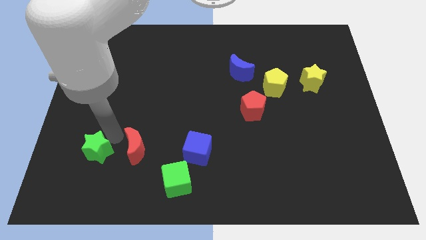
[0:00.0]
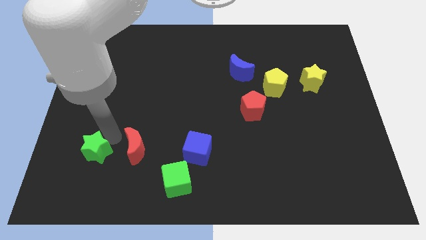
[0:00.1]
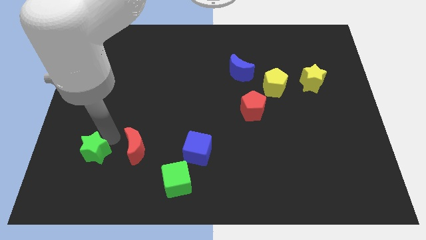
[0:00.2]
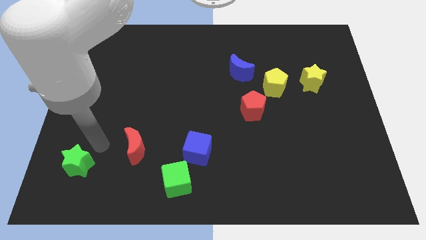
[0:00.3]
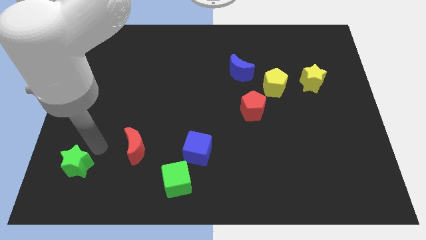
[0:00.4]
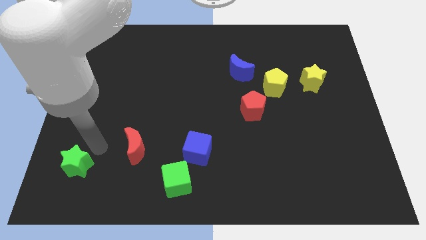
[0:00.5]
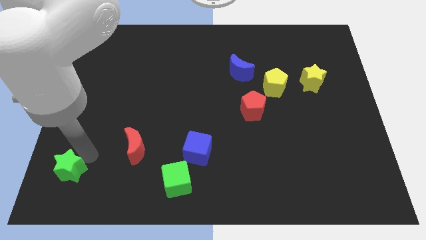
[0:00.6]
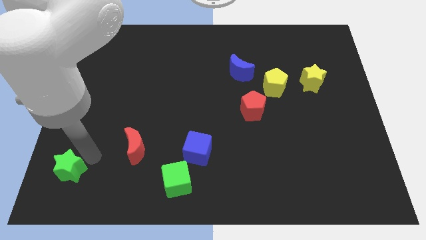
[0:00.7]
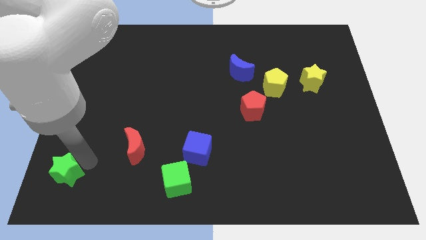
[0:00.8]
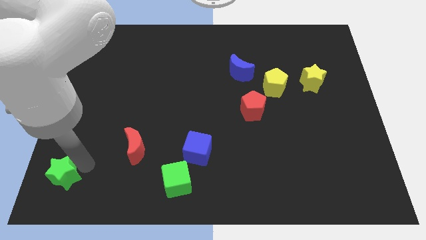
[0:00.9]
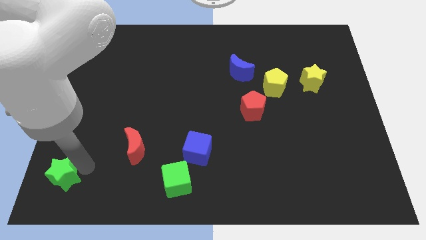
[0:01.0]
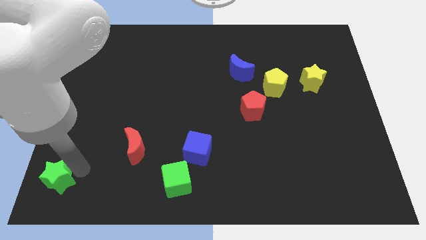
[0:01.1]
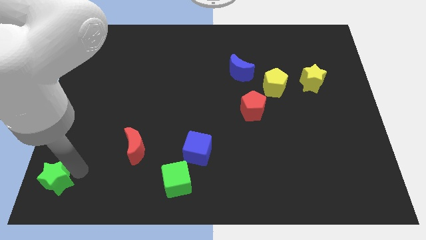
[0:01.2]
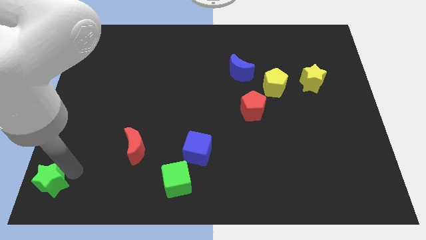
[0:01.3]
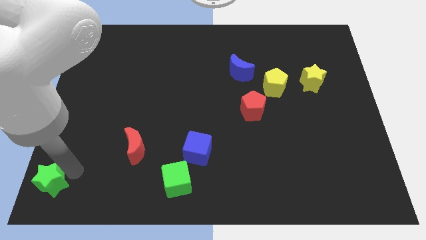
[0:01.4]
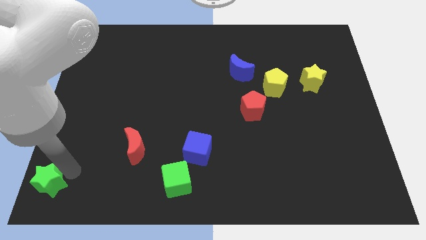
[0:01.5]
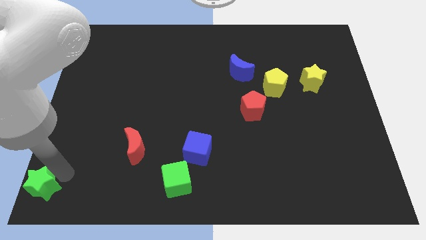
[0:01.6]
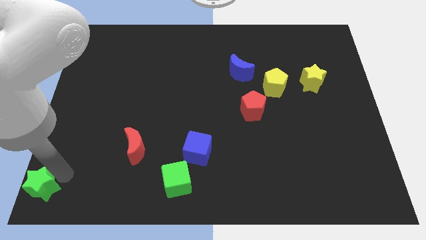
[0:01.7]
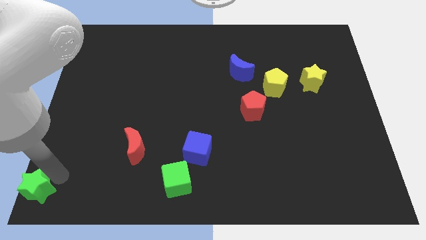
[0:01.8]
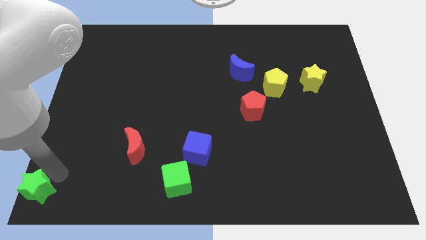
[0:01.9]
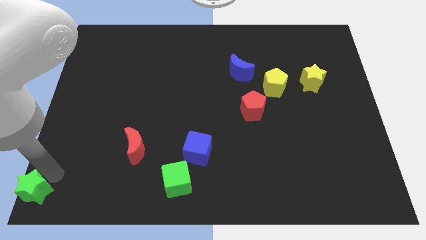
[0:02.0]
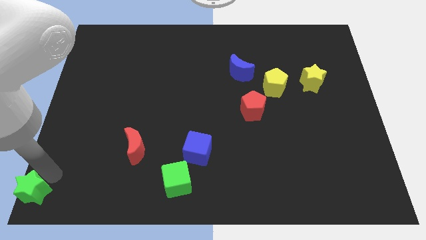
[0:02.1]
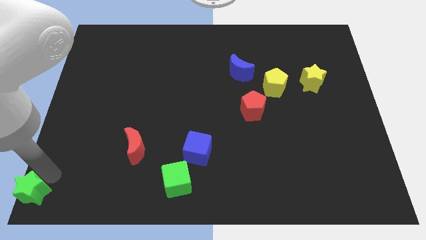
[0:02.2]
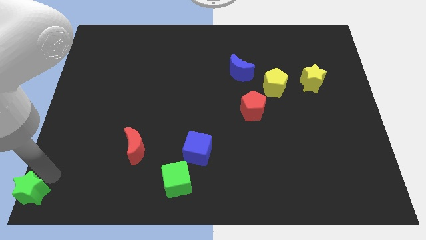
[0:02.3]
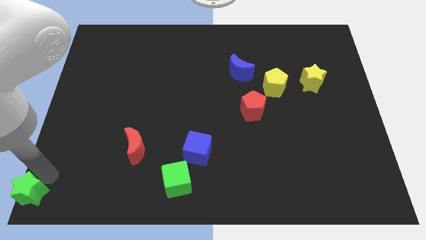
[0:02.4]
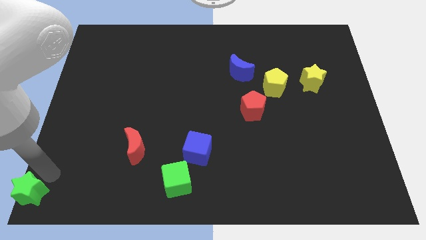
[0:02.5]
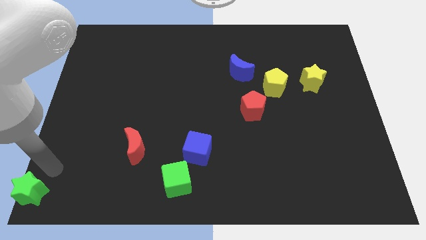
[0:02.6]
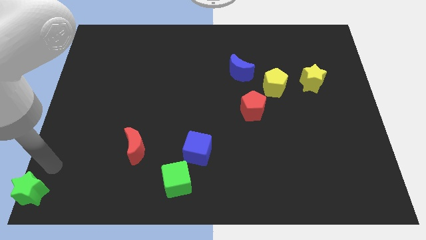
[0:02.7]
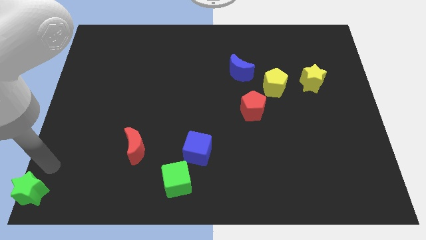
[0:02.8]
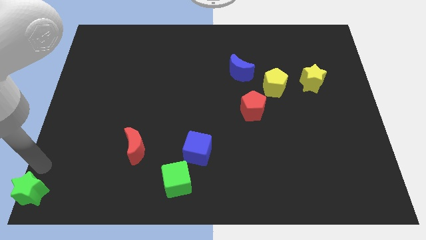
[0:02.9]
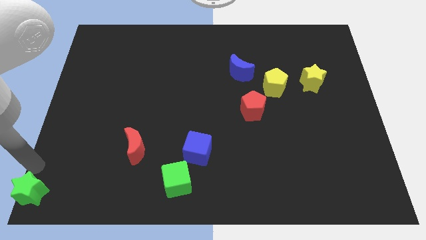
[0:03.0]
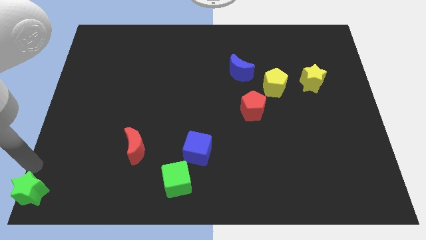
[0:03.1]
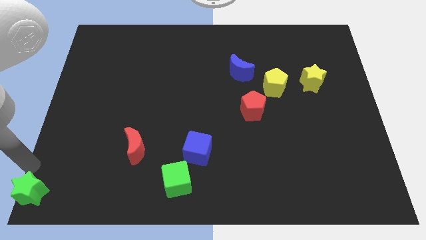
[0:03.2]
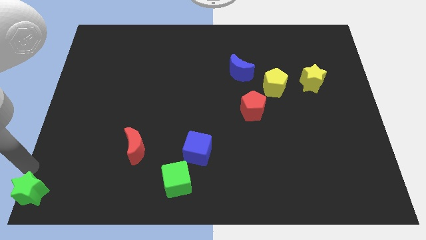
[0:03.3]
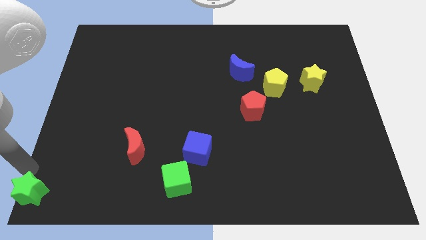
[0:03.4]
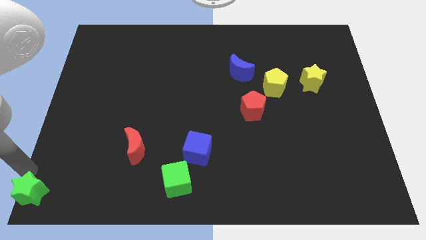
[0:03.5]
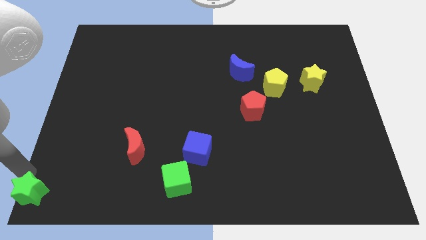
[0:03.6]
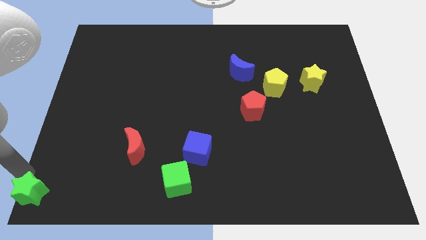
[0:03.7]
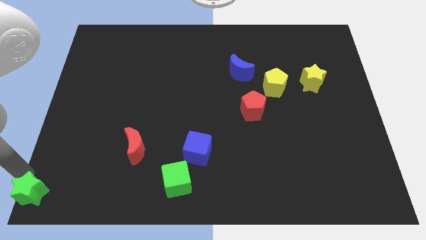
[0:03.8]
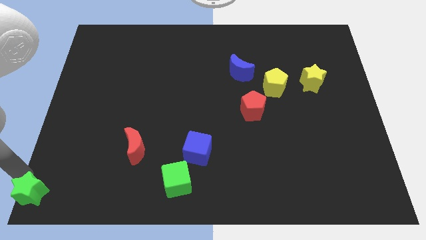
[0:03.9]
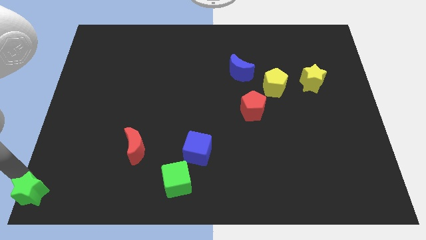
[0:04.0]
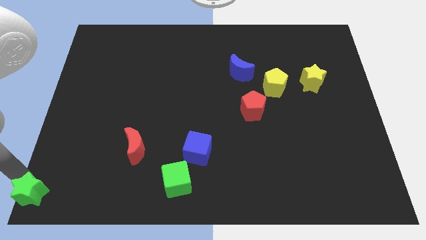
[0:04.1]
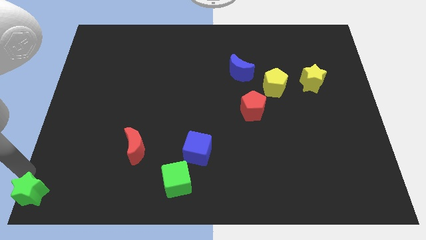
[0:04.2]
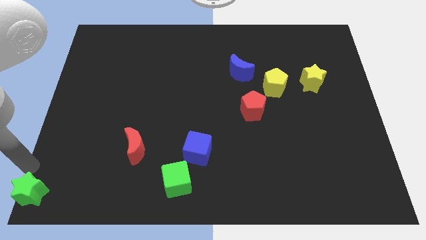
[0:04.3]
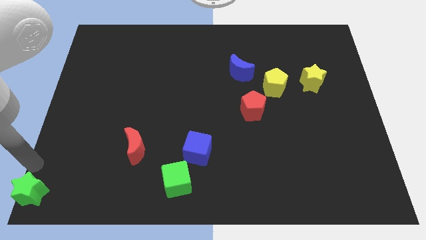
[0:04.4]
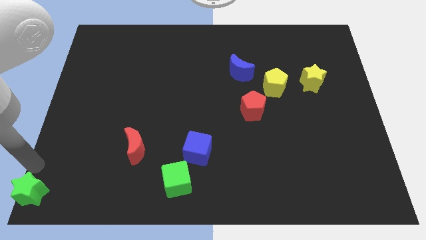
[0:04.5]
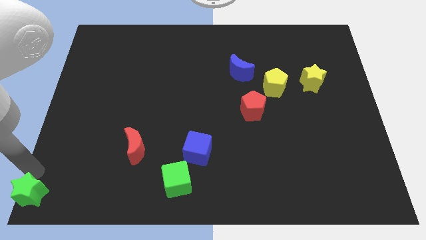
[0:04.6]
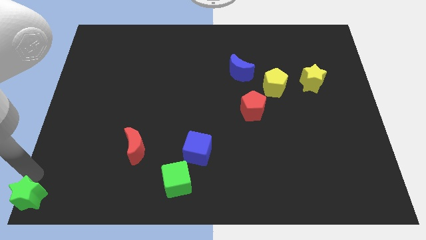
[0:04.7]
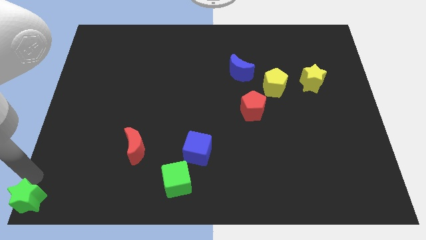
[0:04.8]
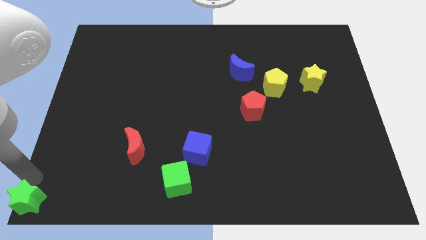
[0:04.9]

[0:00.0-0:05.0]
place the green star at the bottom left corner of the board

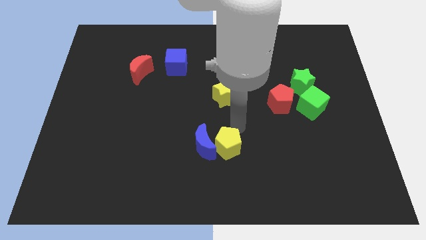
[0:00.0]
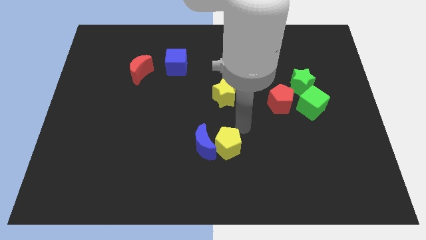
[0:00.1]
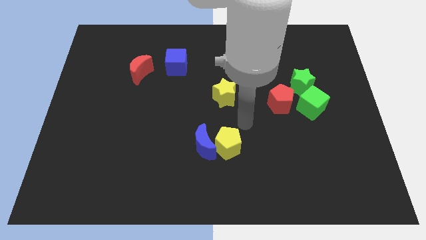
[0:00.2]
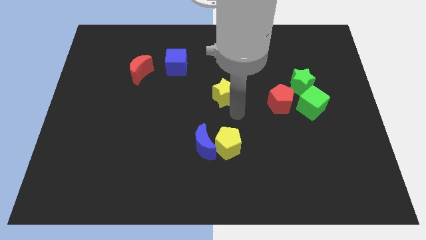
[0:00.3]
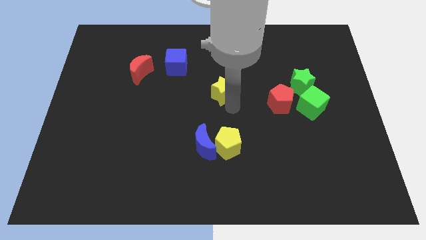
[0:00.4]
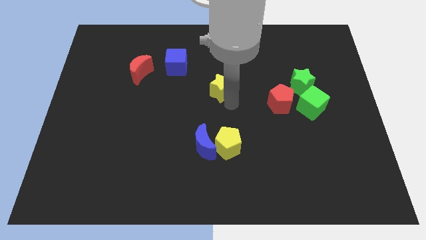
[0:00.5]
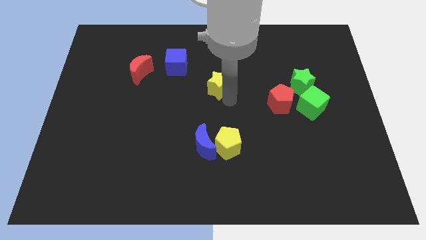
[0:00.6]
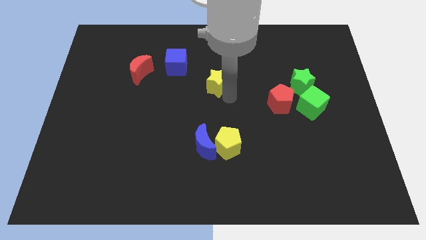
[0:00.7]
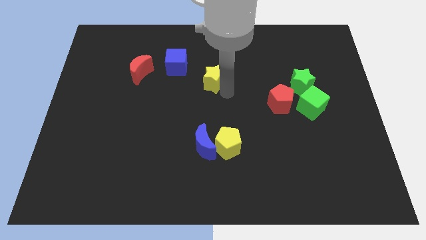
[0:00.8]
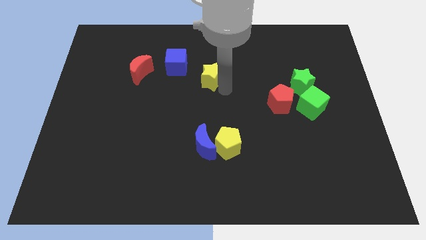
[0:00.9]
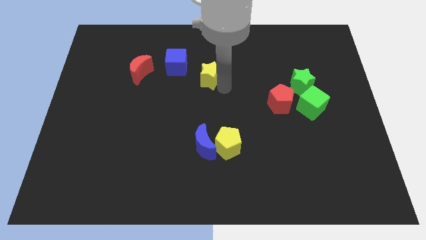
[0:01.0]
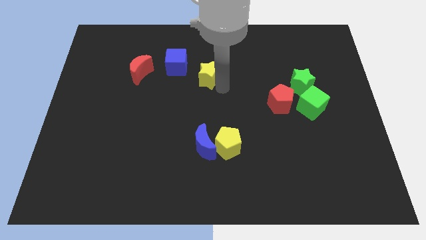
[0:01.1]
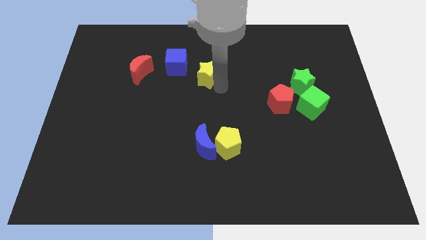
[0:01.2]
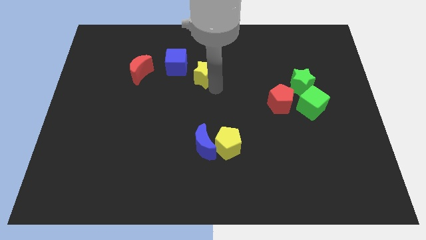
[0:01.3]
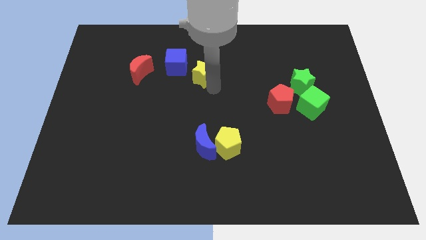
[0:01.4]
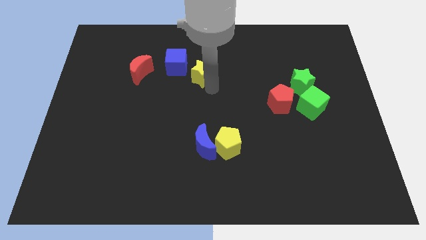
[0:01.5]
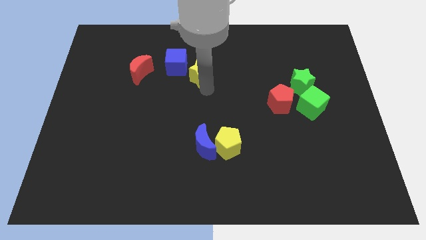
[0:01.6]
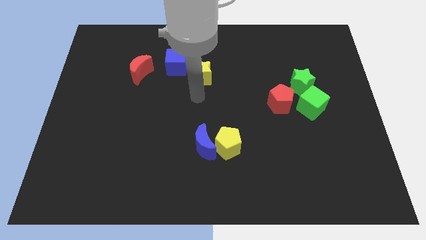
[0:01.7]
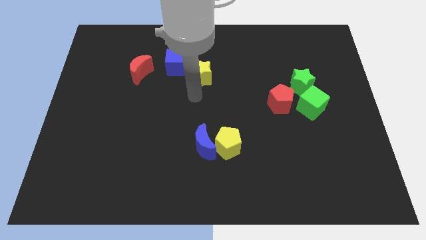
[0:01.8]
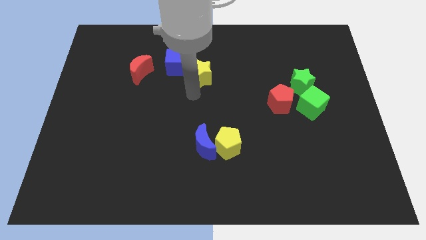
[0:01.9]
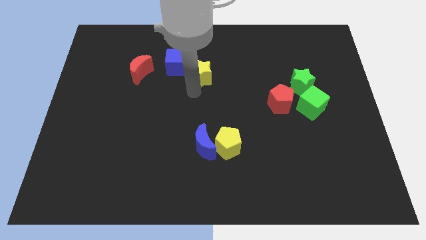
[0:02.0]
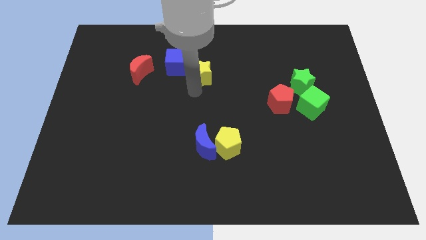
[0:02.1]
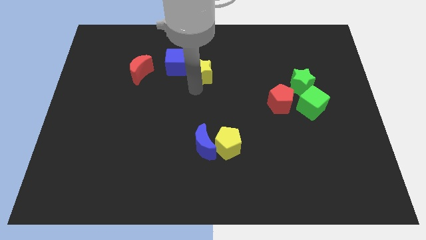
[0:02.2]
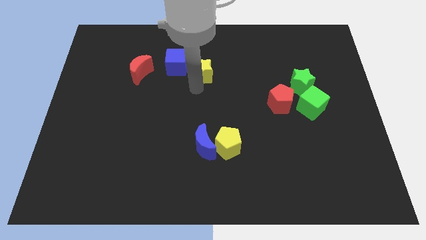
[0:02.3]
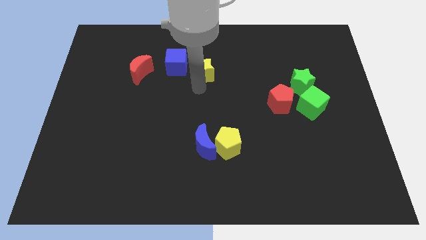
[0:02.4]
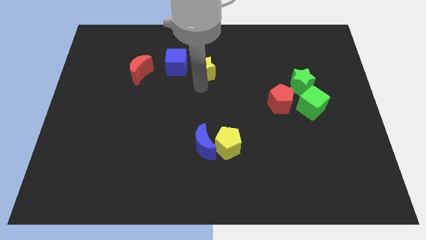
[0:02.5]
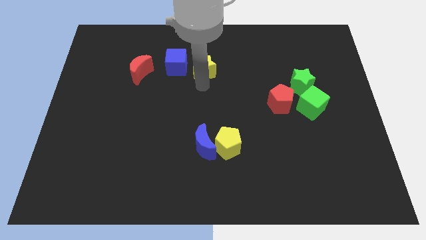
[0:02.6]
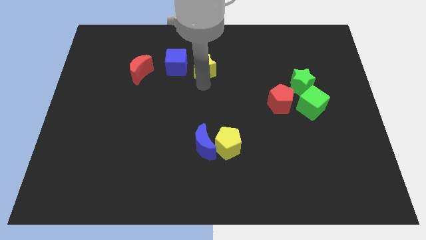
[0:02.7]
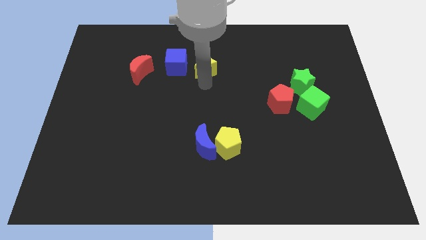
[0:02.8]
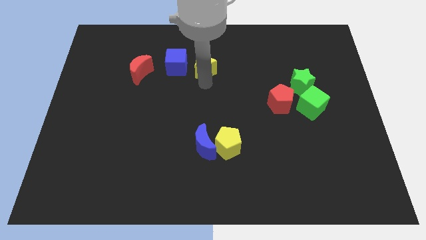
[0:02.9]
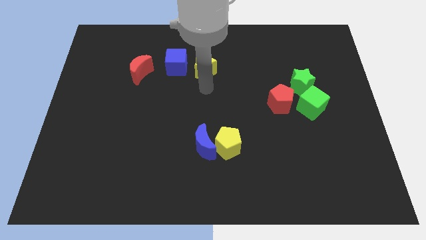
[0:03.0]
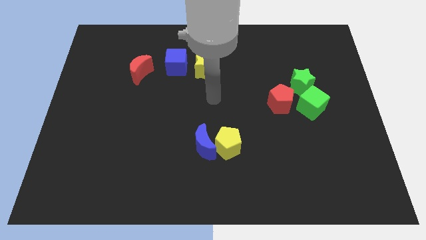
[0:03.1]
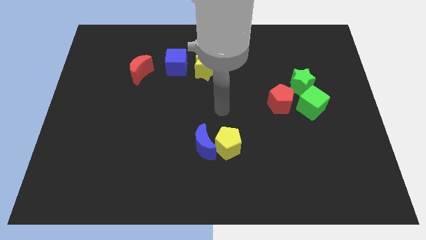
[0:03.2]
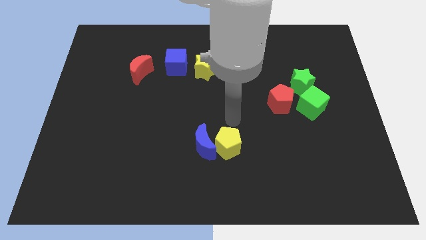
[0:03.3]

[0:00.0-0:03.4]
place the yellow star to the right of the blue cube

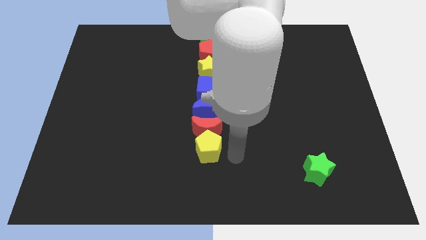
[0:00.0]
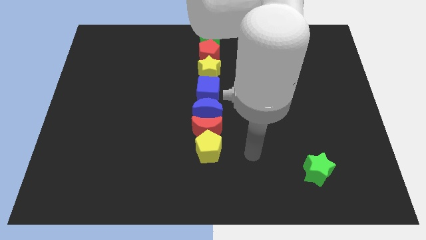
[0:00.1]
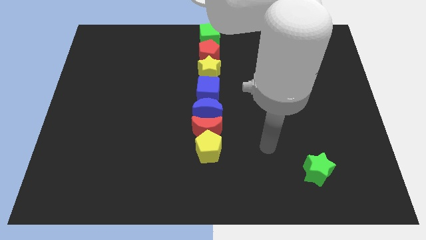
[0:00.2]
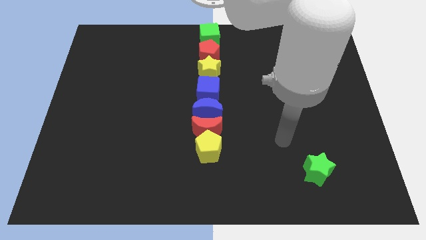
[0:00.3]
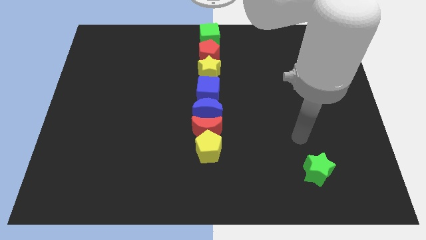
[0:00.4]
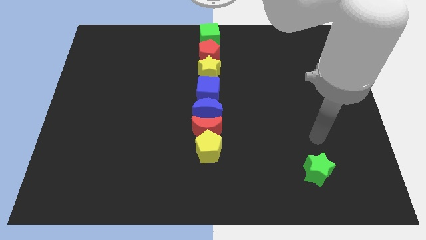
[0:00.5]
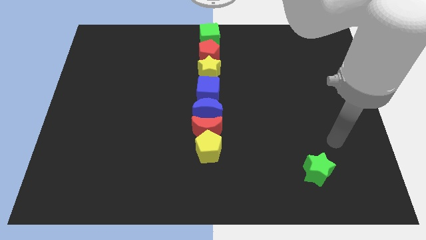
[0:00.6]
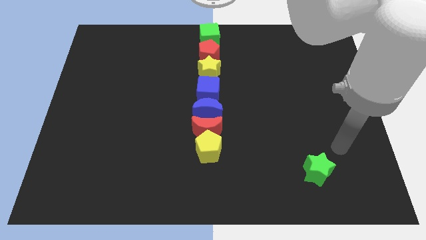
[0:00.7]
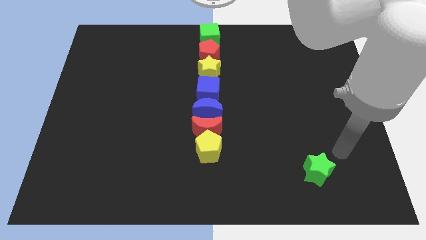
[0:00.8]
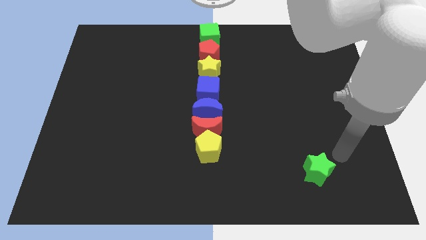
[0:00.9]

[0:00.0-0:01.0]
move away from the yellow pentagon
